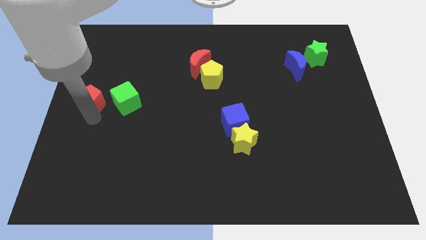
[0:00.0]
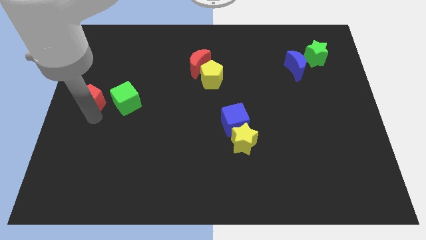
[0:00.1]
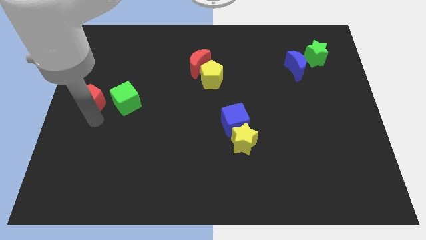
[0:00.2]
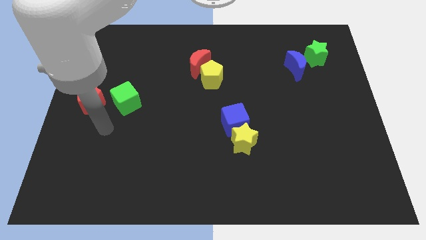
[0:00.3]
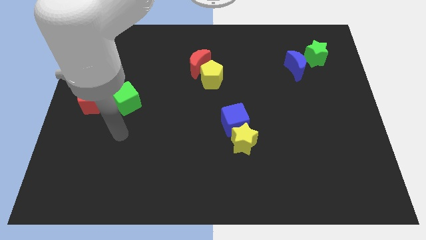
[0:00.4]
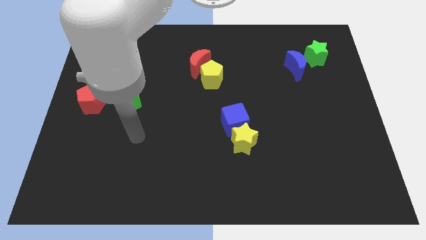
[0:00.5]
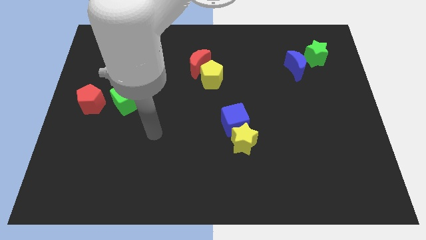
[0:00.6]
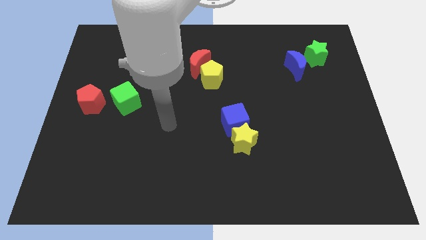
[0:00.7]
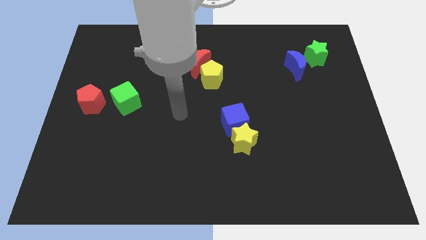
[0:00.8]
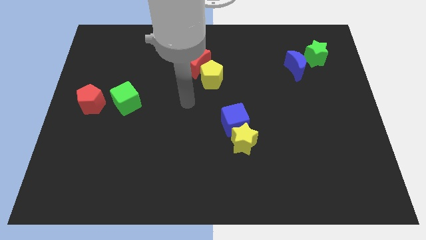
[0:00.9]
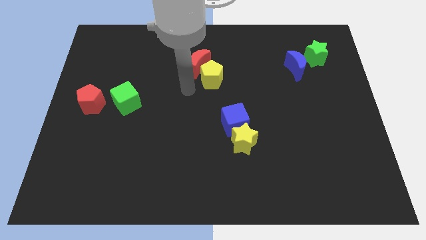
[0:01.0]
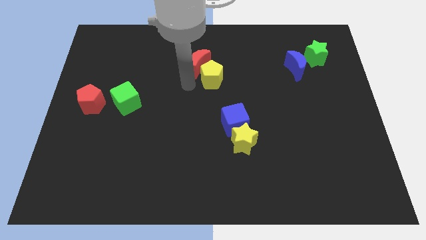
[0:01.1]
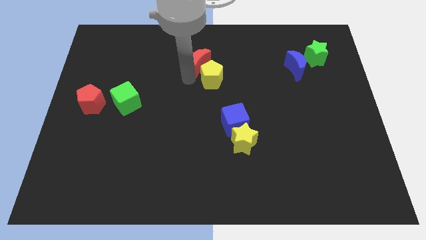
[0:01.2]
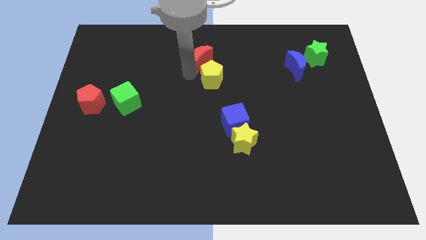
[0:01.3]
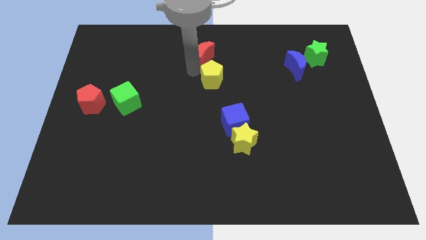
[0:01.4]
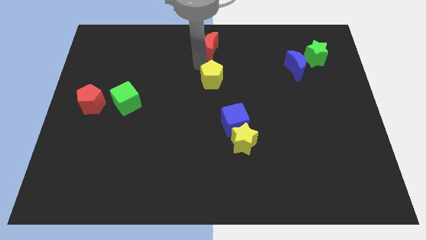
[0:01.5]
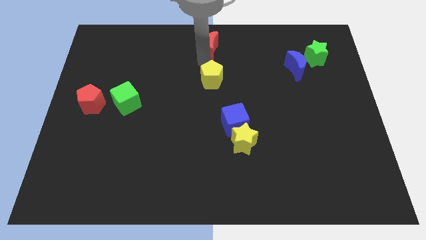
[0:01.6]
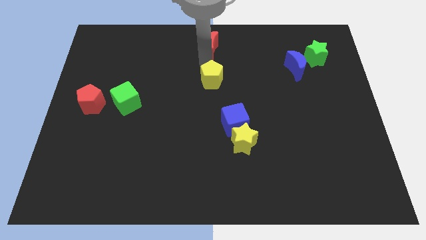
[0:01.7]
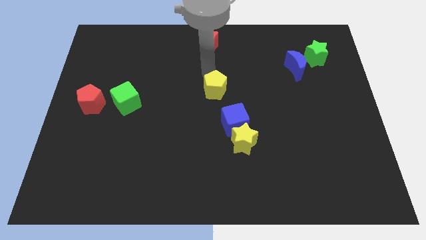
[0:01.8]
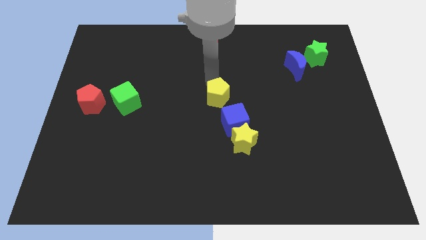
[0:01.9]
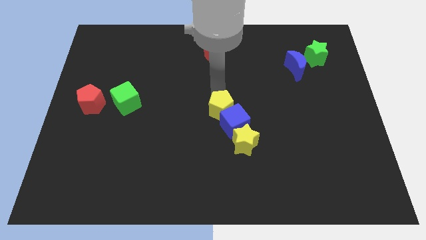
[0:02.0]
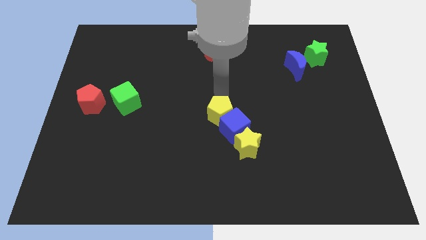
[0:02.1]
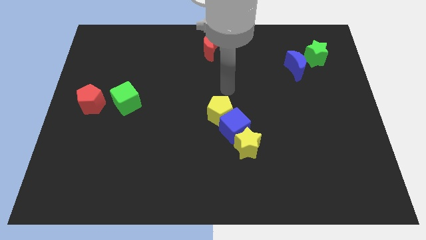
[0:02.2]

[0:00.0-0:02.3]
move the red crescent to the top center of the board

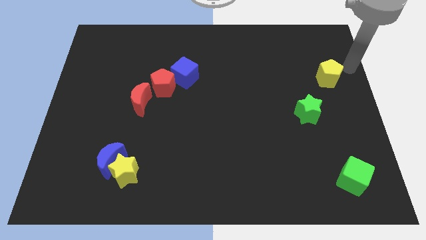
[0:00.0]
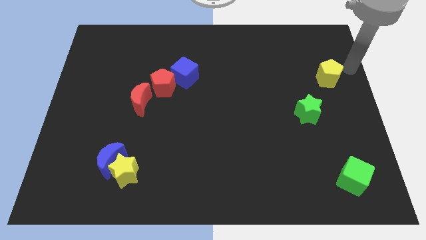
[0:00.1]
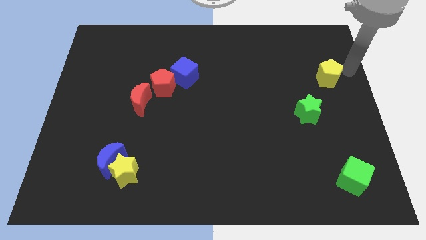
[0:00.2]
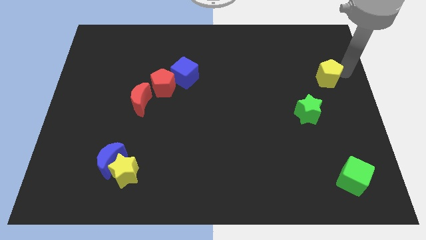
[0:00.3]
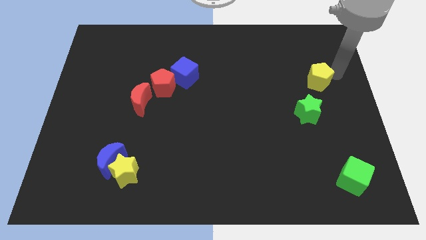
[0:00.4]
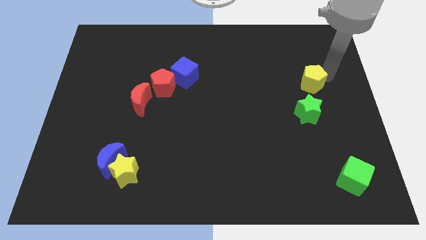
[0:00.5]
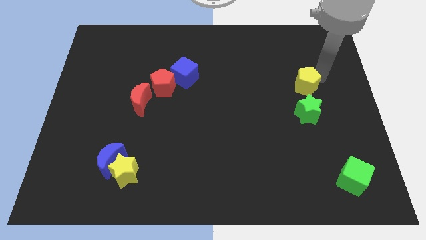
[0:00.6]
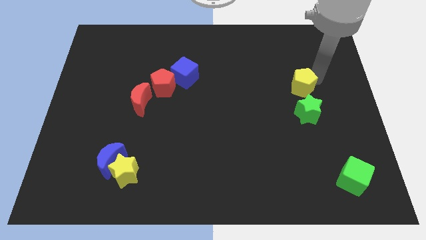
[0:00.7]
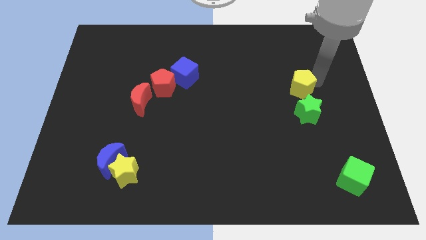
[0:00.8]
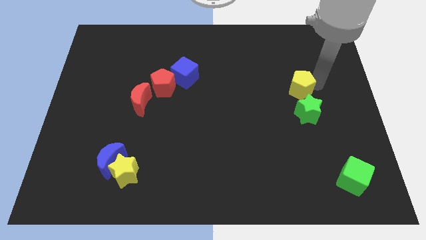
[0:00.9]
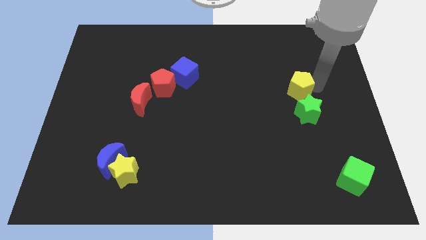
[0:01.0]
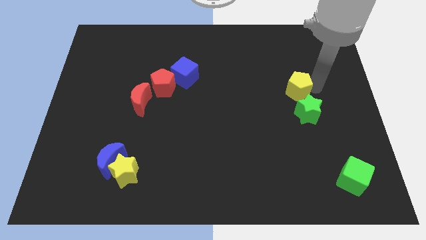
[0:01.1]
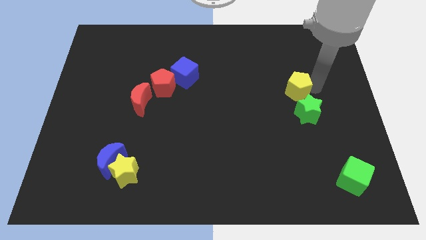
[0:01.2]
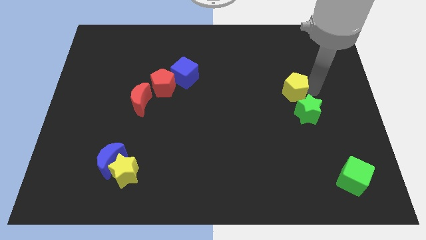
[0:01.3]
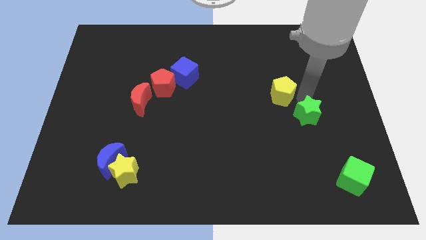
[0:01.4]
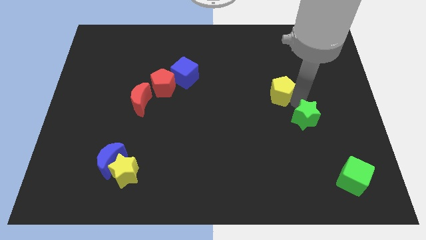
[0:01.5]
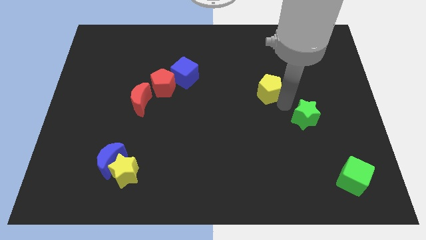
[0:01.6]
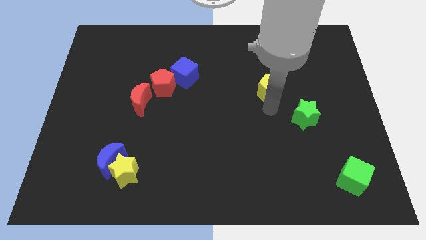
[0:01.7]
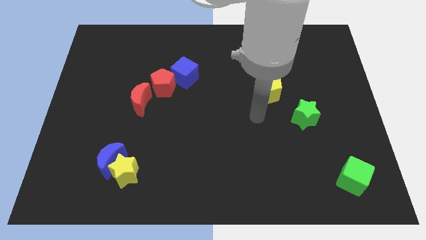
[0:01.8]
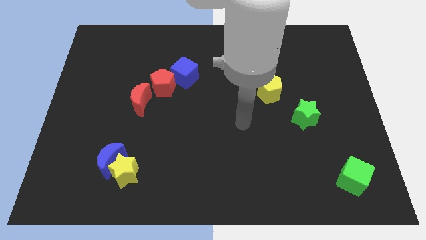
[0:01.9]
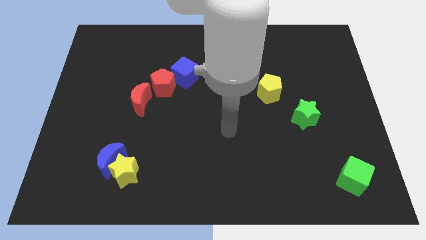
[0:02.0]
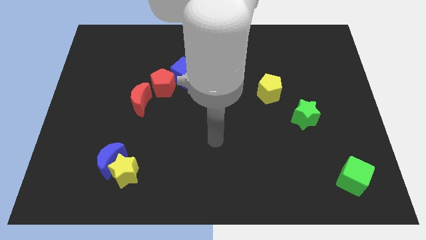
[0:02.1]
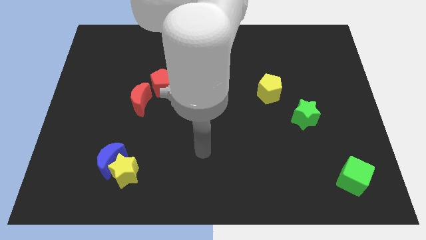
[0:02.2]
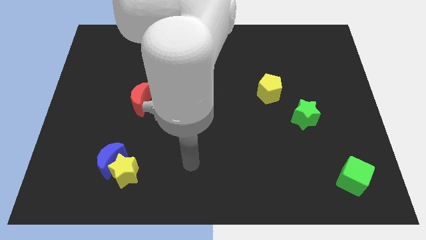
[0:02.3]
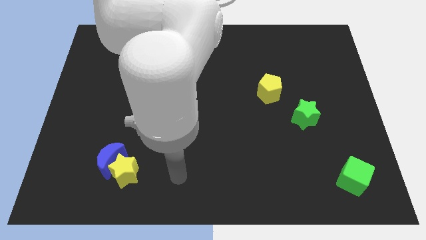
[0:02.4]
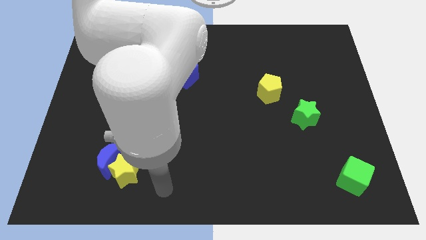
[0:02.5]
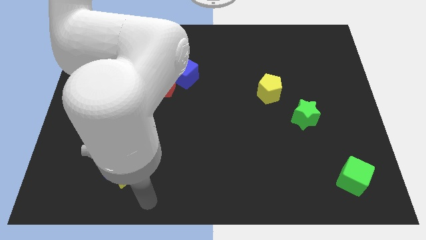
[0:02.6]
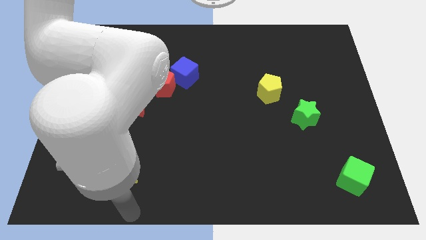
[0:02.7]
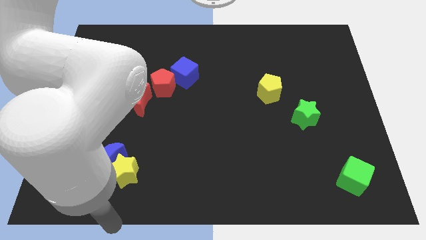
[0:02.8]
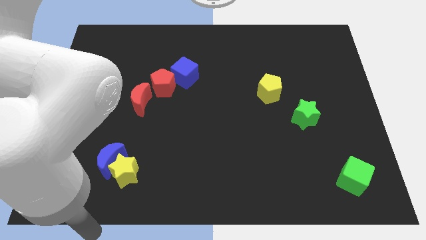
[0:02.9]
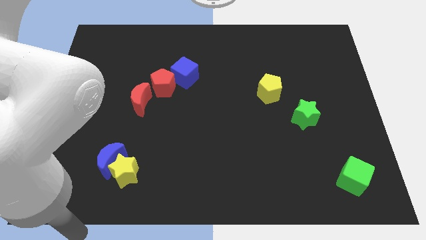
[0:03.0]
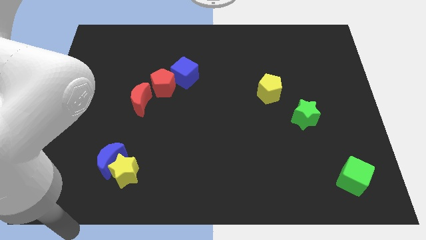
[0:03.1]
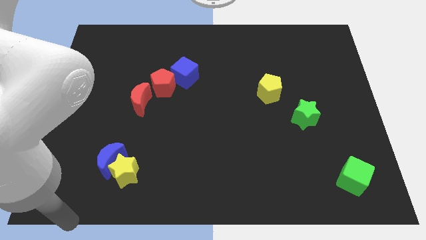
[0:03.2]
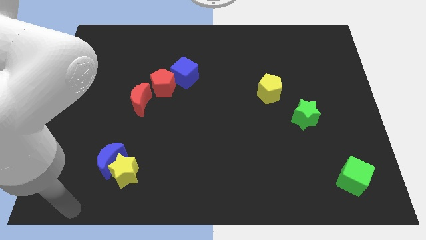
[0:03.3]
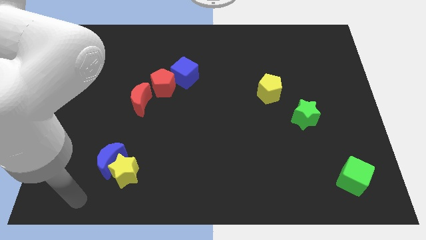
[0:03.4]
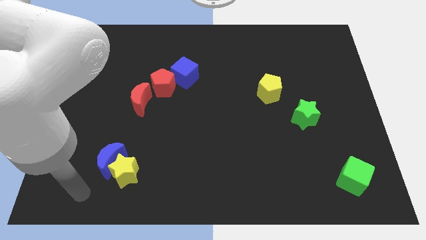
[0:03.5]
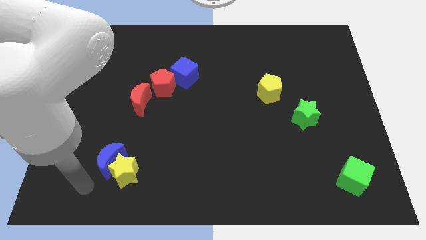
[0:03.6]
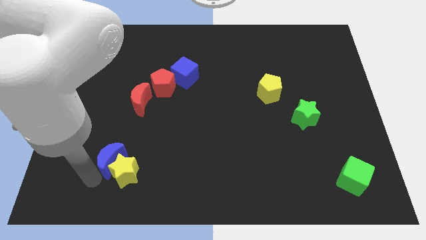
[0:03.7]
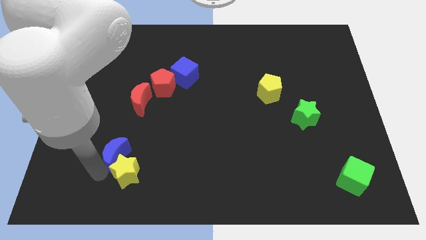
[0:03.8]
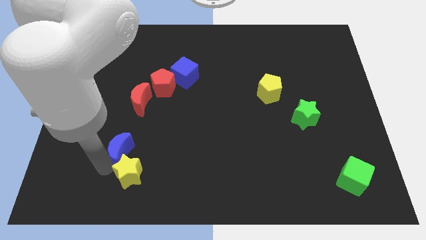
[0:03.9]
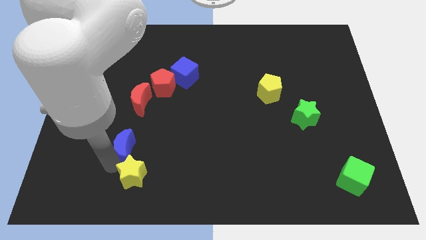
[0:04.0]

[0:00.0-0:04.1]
place the yellow pentagon diagonally to green star

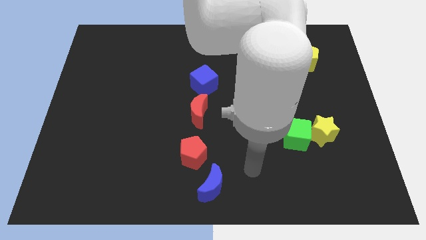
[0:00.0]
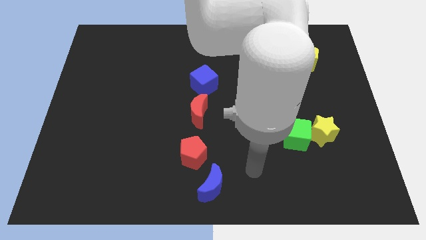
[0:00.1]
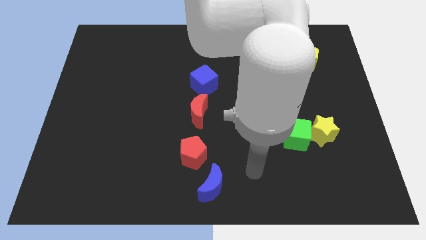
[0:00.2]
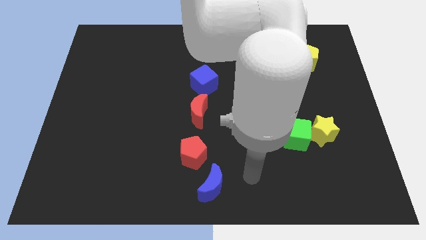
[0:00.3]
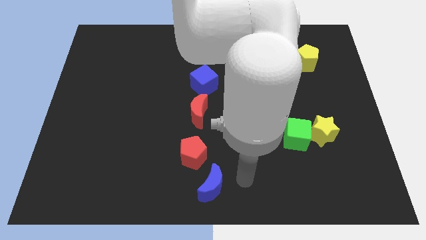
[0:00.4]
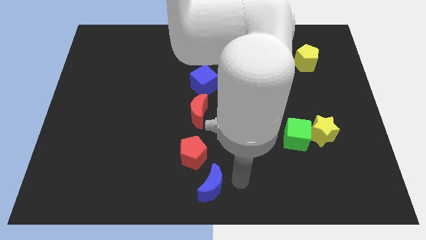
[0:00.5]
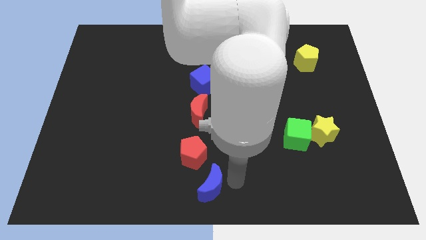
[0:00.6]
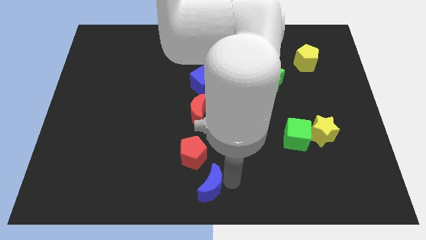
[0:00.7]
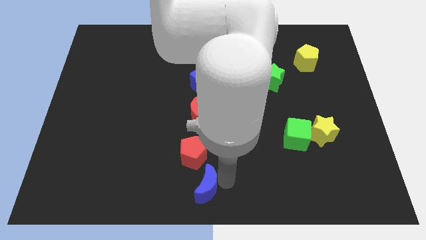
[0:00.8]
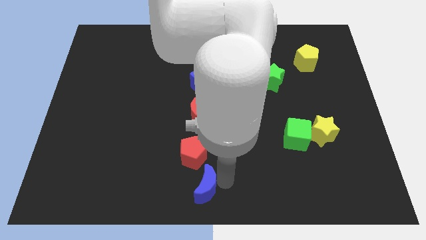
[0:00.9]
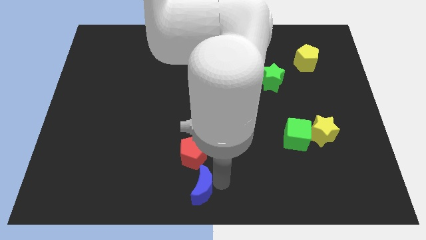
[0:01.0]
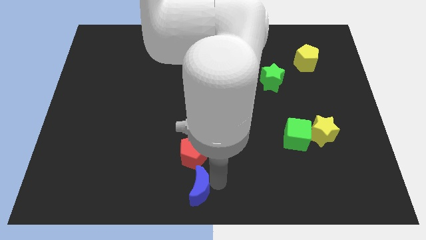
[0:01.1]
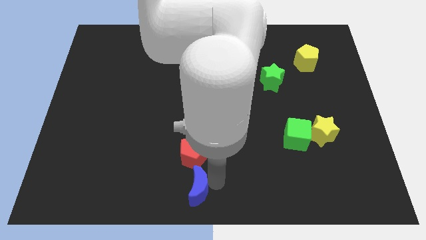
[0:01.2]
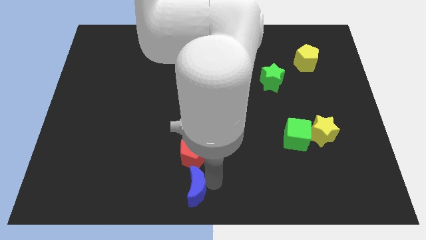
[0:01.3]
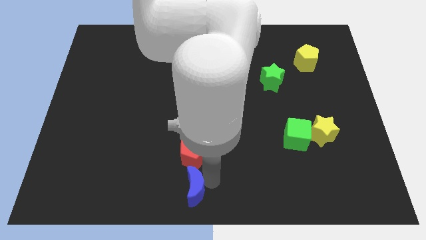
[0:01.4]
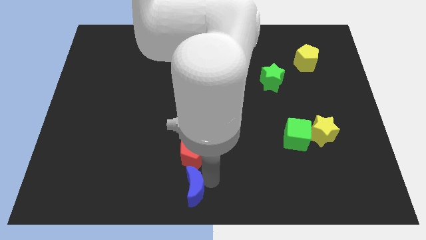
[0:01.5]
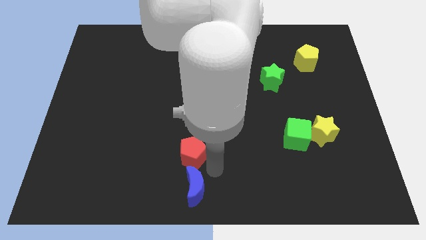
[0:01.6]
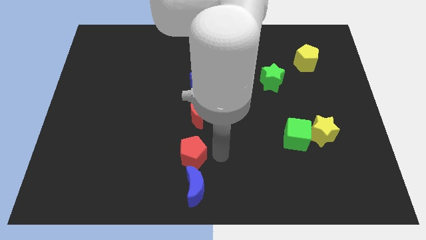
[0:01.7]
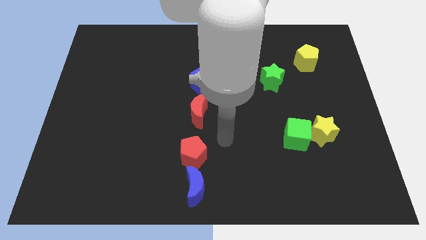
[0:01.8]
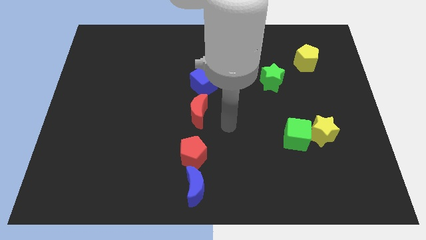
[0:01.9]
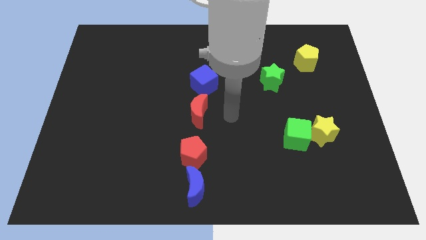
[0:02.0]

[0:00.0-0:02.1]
place the blue crescent to the bottom center of the board

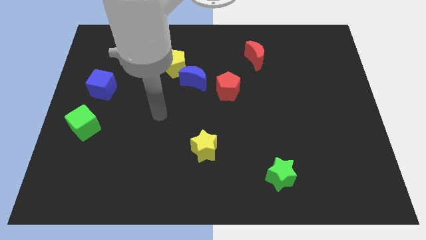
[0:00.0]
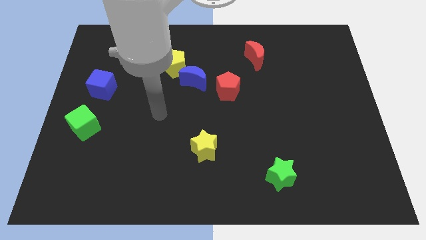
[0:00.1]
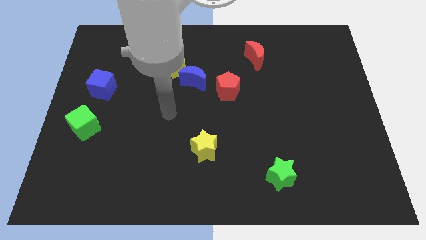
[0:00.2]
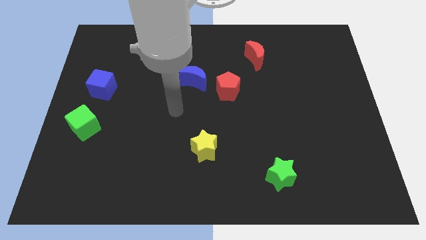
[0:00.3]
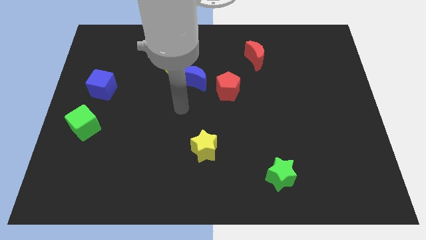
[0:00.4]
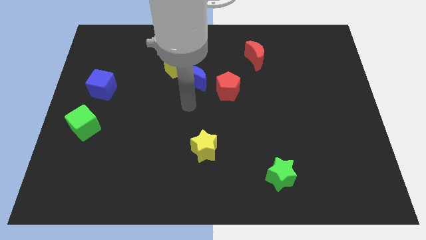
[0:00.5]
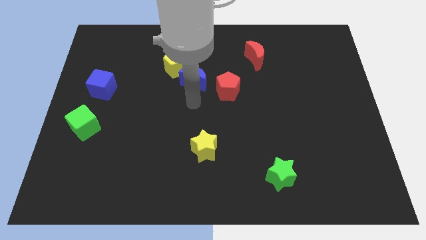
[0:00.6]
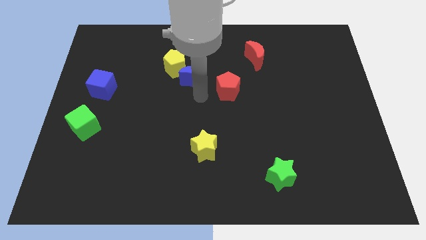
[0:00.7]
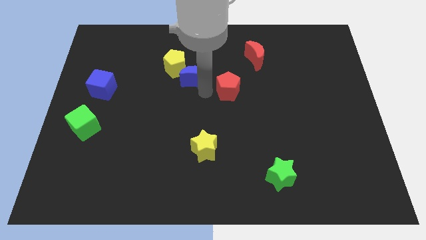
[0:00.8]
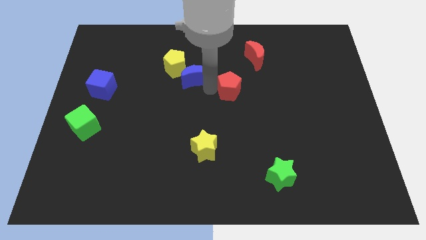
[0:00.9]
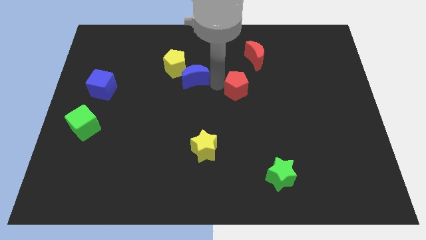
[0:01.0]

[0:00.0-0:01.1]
tap the blue crescent and red pentagon
